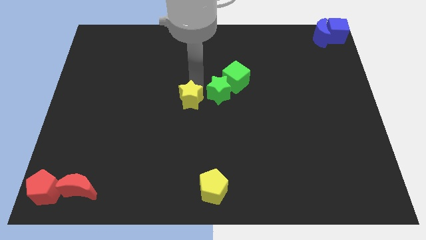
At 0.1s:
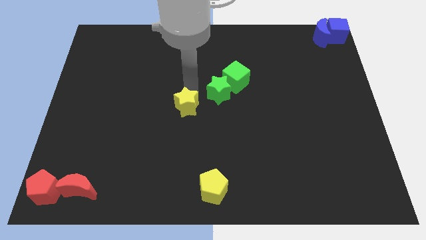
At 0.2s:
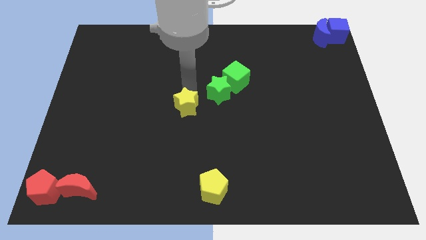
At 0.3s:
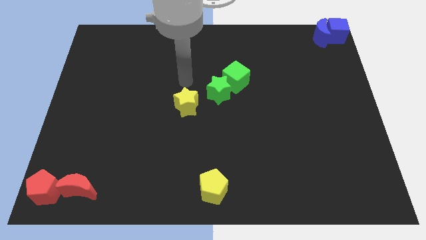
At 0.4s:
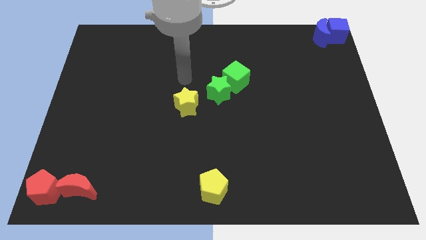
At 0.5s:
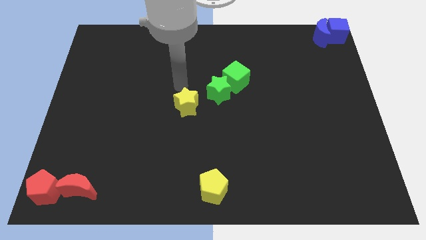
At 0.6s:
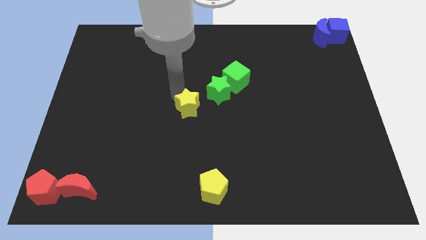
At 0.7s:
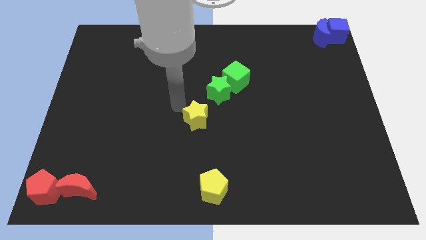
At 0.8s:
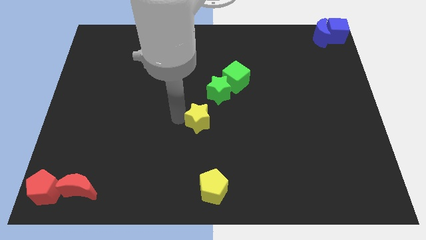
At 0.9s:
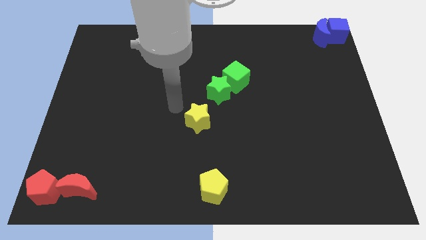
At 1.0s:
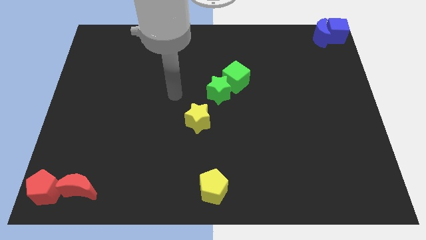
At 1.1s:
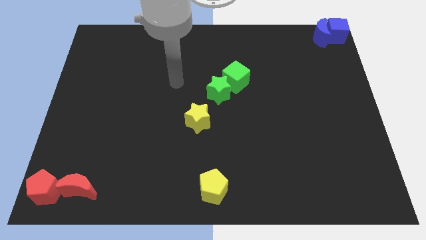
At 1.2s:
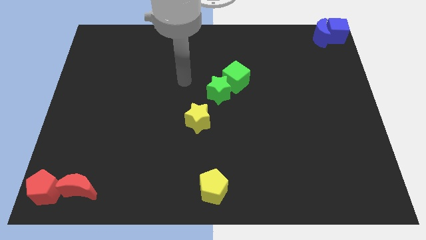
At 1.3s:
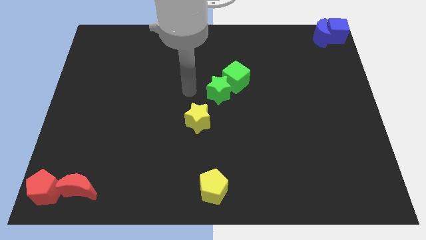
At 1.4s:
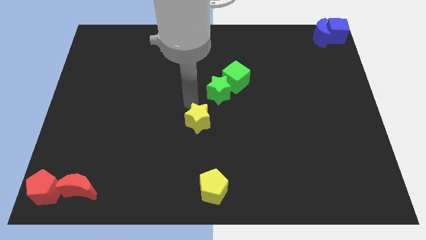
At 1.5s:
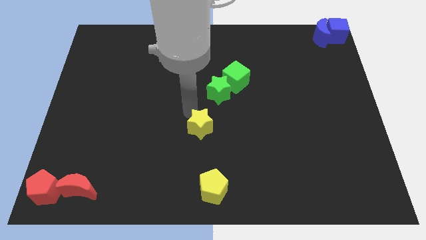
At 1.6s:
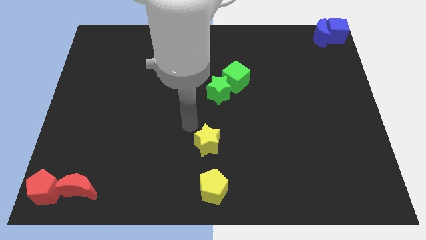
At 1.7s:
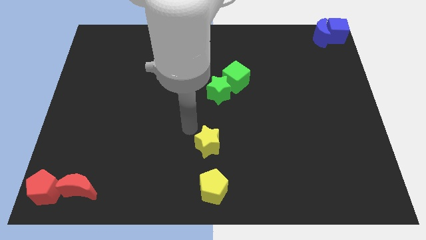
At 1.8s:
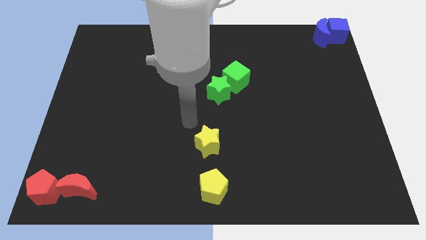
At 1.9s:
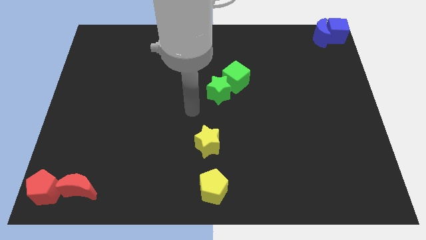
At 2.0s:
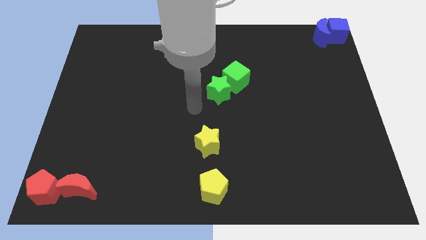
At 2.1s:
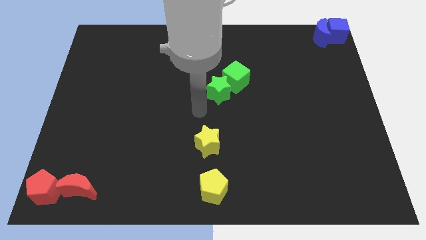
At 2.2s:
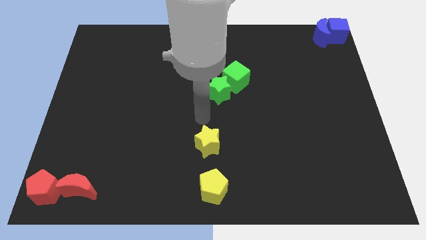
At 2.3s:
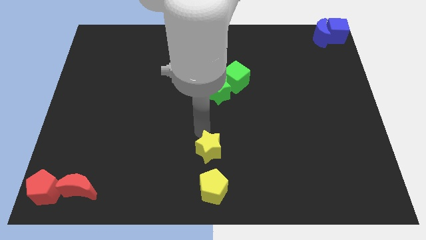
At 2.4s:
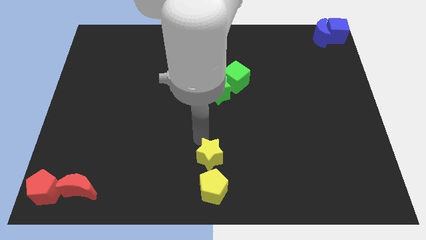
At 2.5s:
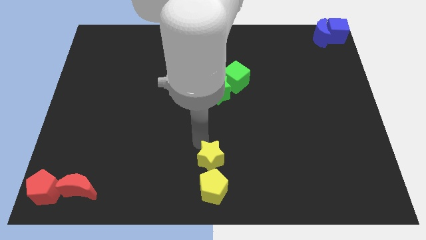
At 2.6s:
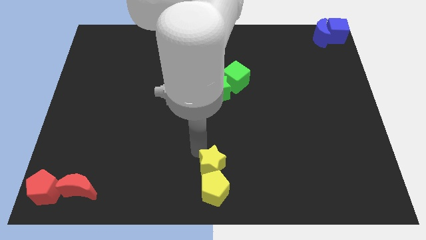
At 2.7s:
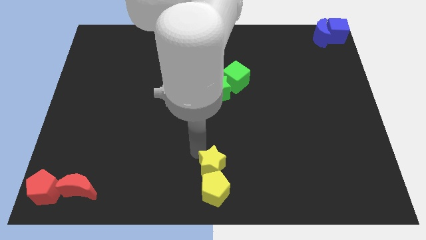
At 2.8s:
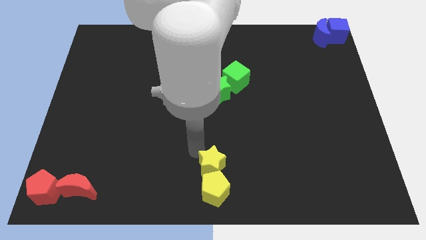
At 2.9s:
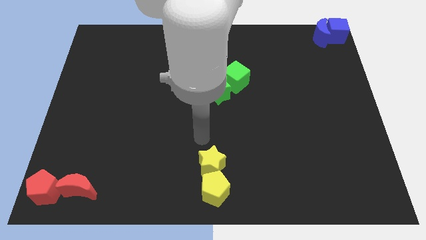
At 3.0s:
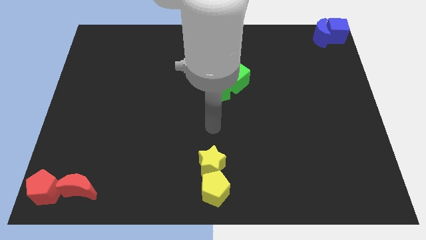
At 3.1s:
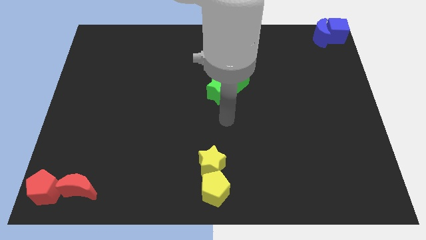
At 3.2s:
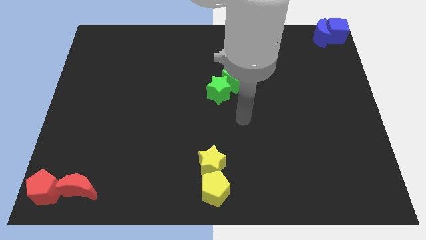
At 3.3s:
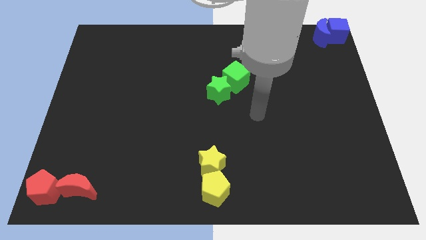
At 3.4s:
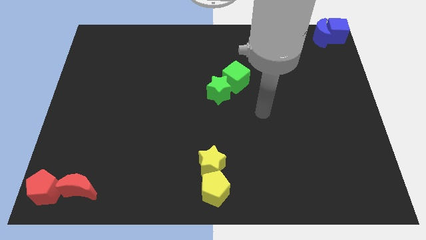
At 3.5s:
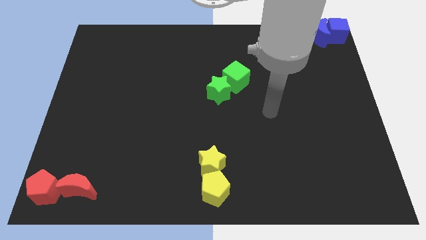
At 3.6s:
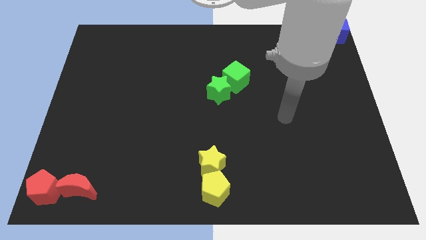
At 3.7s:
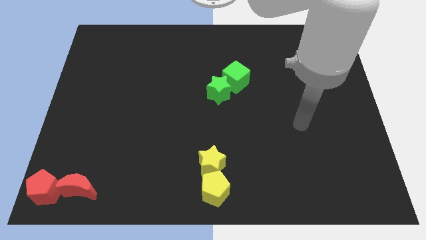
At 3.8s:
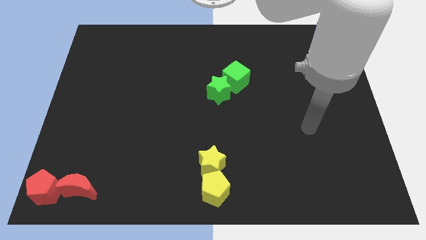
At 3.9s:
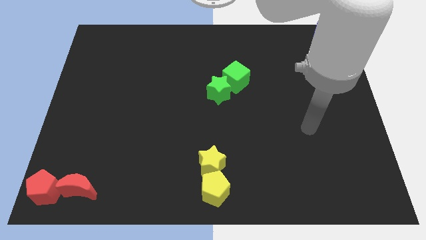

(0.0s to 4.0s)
push yellow star into yellow pentagon

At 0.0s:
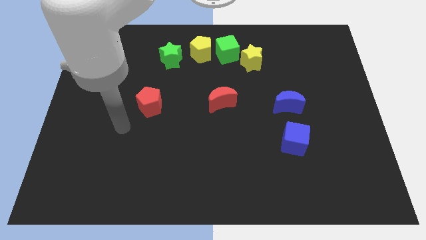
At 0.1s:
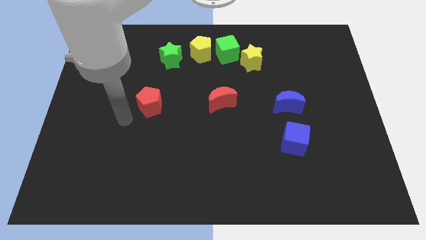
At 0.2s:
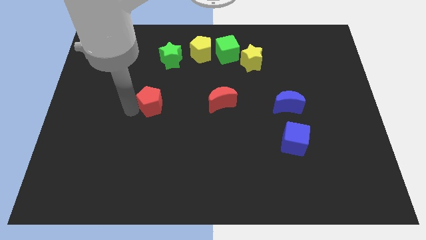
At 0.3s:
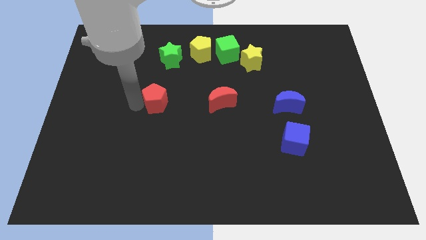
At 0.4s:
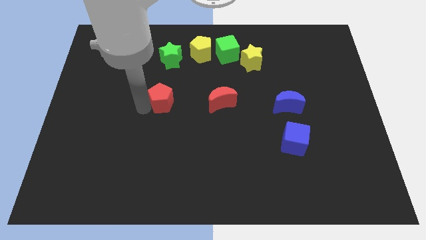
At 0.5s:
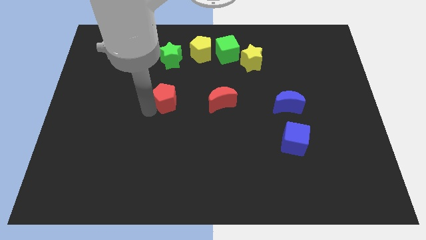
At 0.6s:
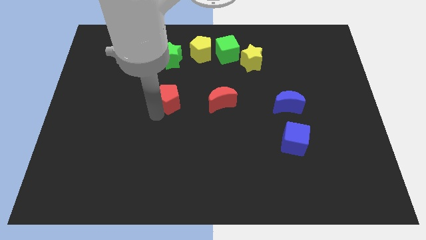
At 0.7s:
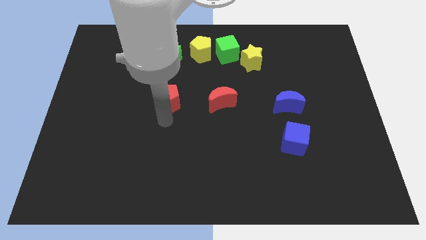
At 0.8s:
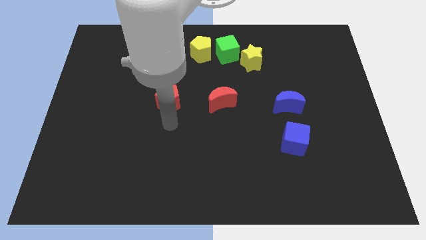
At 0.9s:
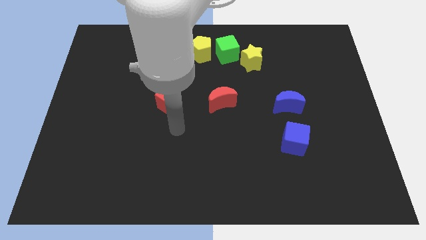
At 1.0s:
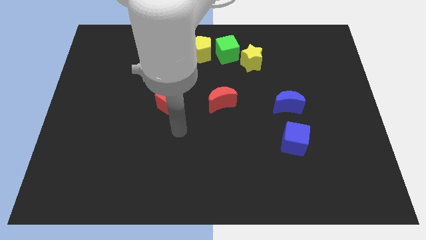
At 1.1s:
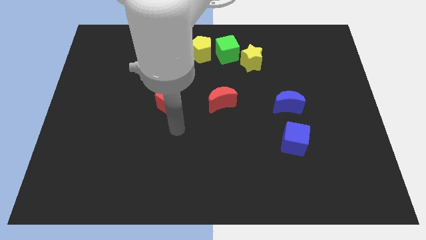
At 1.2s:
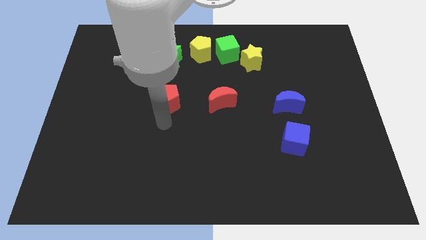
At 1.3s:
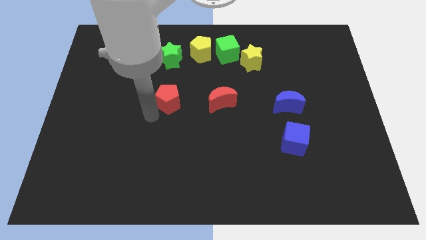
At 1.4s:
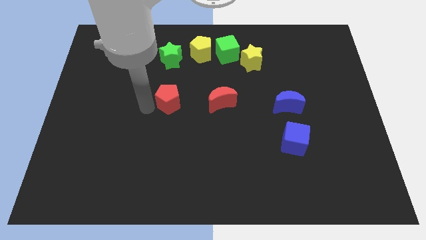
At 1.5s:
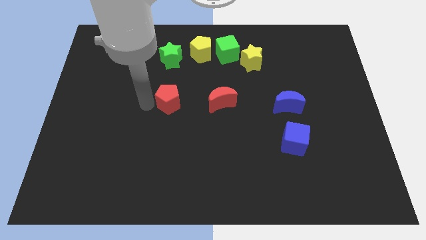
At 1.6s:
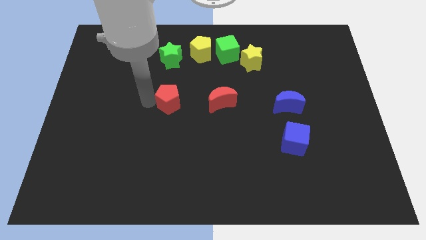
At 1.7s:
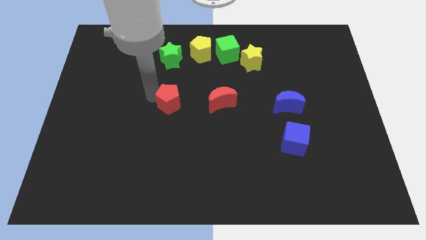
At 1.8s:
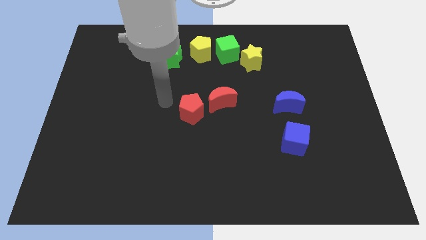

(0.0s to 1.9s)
push the red pentagon into the red crescent

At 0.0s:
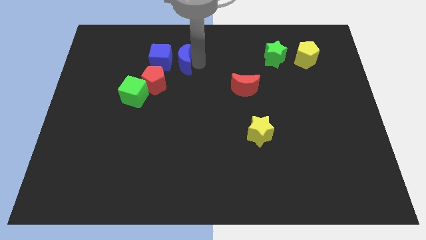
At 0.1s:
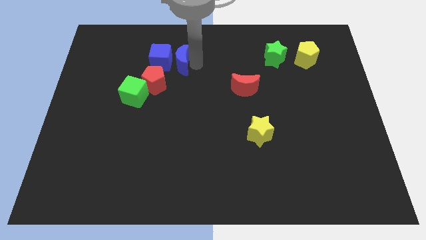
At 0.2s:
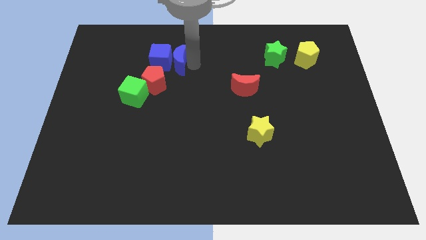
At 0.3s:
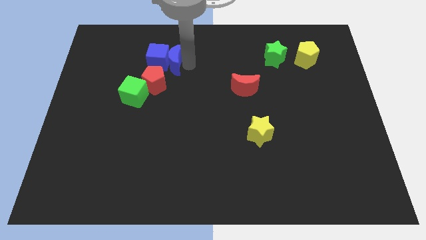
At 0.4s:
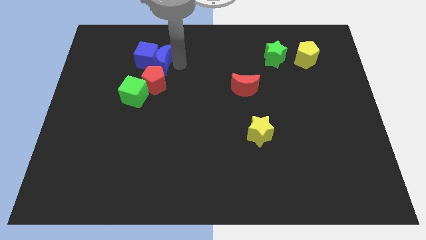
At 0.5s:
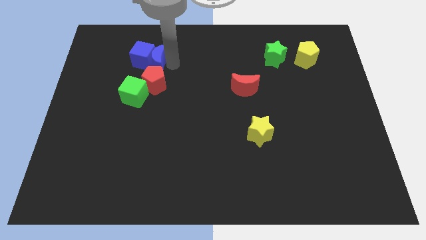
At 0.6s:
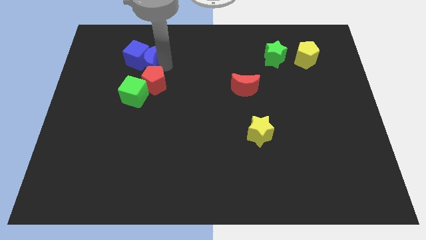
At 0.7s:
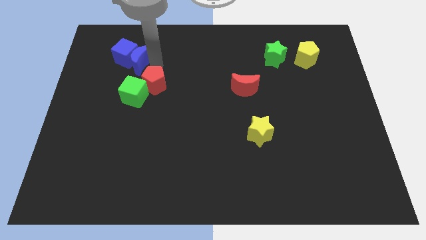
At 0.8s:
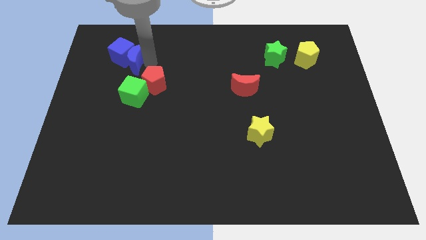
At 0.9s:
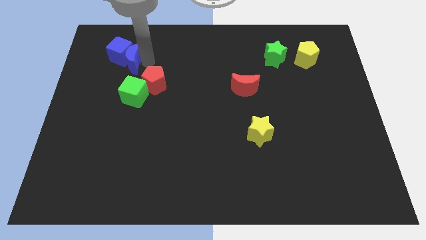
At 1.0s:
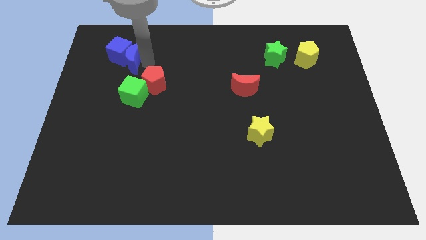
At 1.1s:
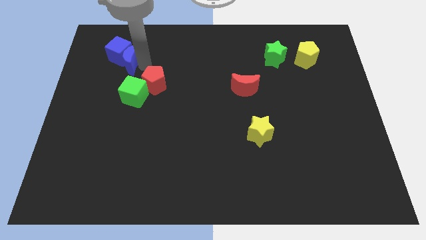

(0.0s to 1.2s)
push blue crescent above green cube

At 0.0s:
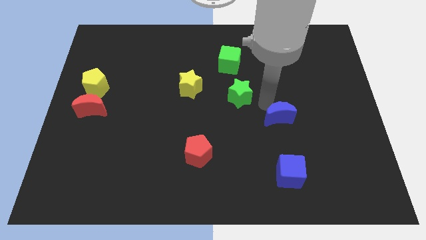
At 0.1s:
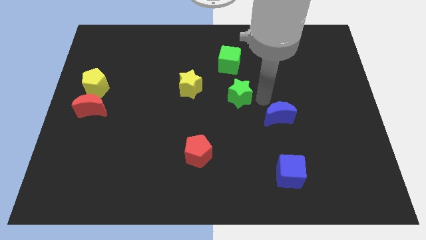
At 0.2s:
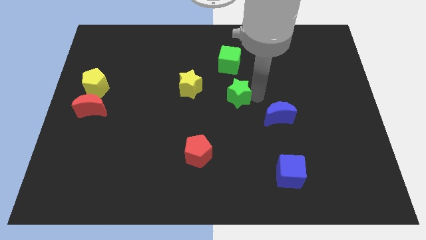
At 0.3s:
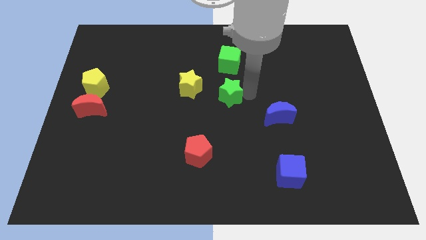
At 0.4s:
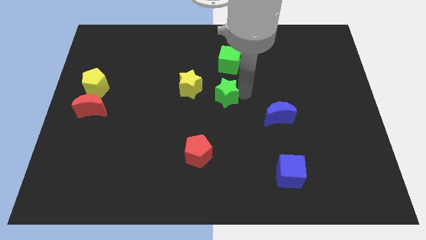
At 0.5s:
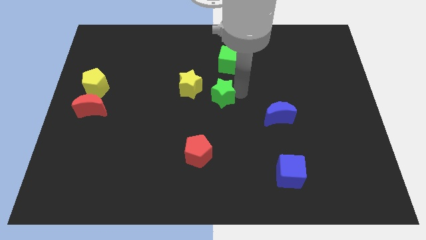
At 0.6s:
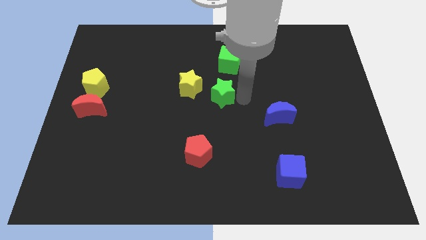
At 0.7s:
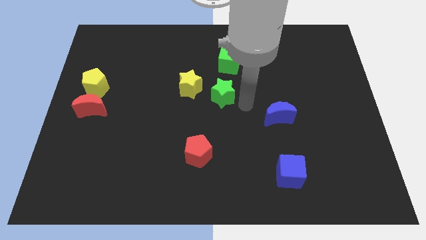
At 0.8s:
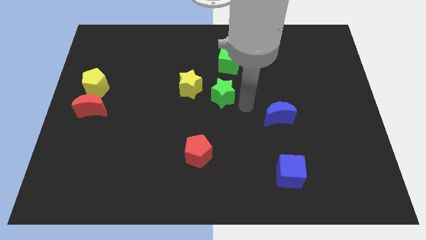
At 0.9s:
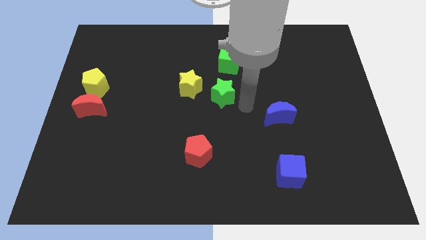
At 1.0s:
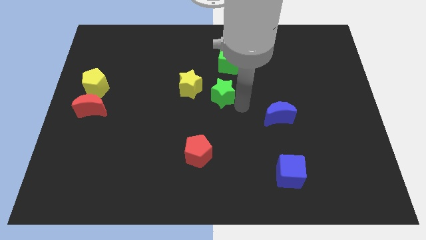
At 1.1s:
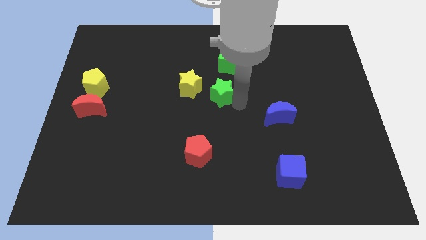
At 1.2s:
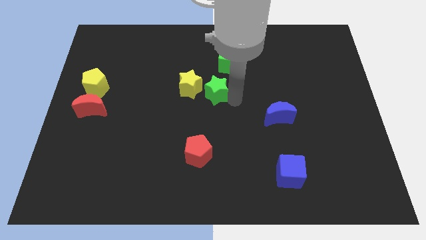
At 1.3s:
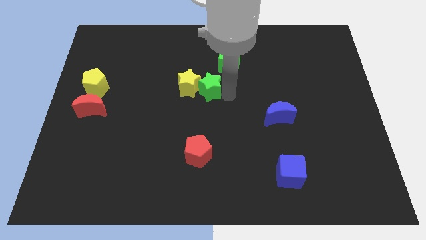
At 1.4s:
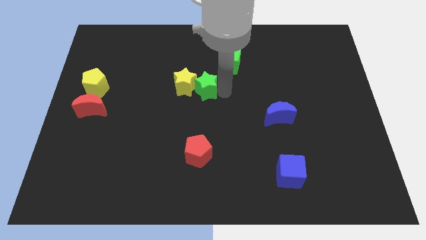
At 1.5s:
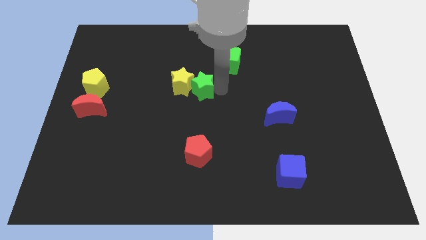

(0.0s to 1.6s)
push the green star into the yellow star

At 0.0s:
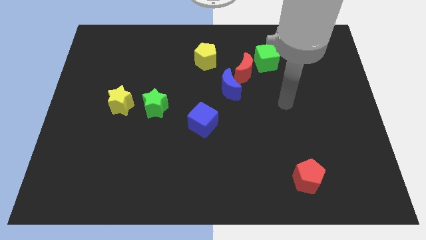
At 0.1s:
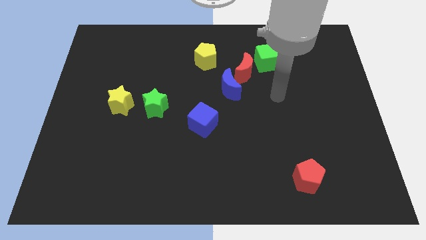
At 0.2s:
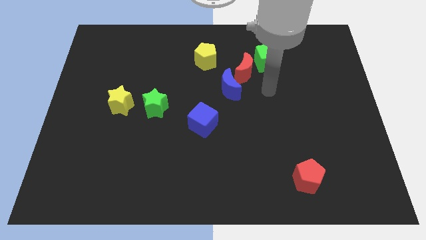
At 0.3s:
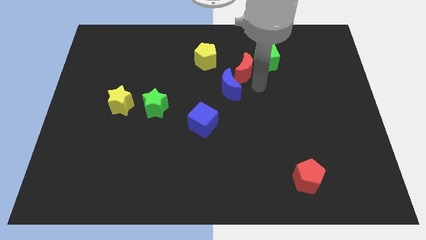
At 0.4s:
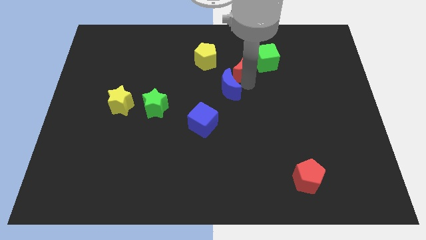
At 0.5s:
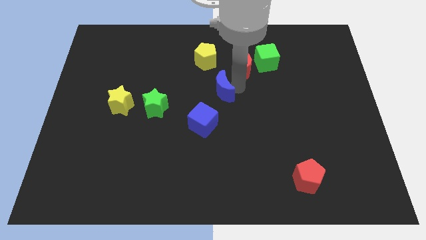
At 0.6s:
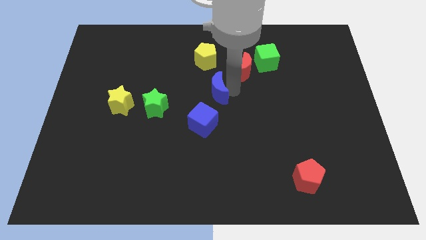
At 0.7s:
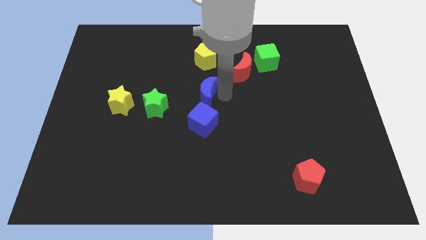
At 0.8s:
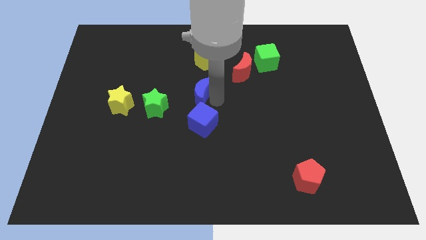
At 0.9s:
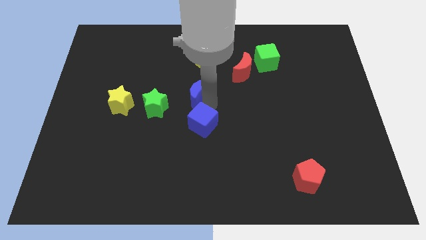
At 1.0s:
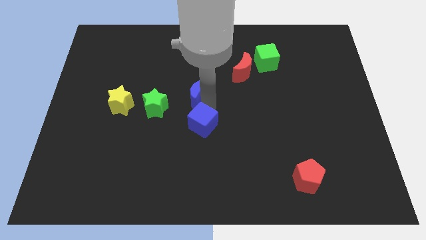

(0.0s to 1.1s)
bring the blue moon at the top side of the blue cube
